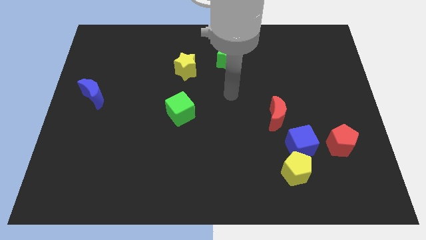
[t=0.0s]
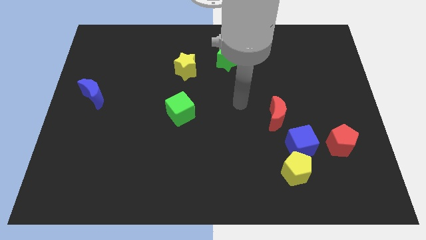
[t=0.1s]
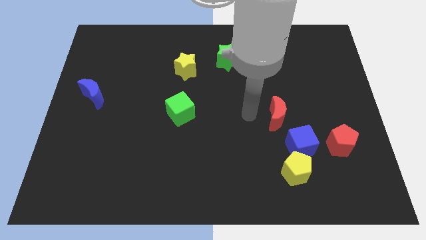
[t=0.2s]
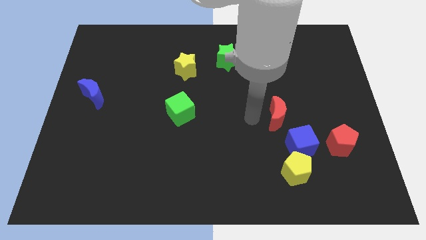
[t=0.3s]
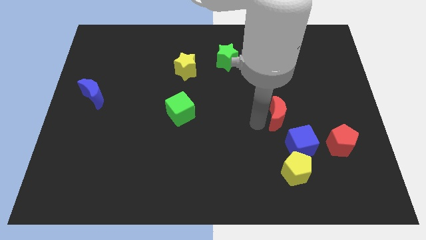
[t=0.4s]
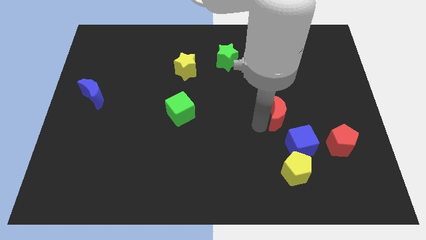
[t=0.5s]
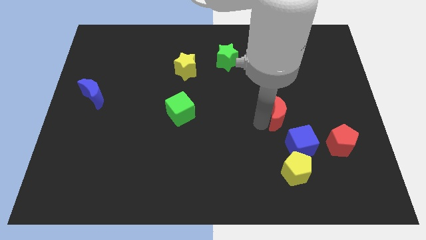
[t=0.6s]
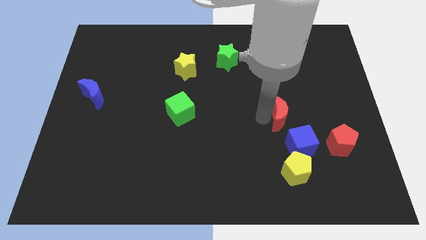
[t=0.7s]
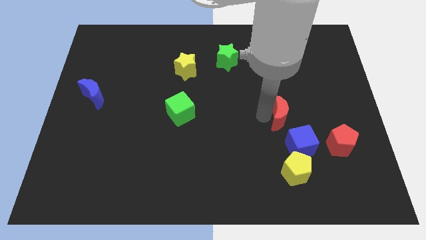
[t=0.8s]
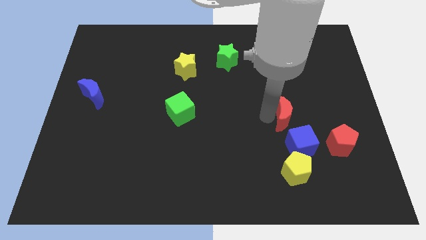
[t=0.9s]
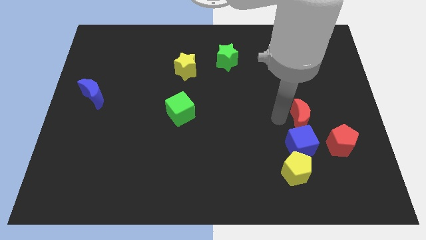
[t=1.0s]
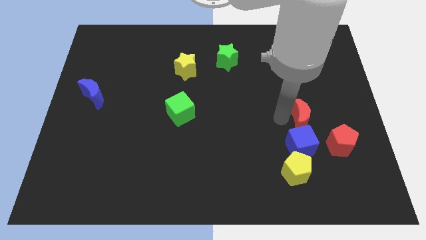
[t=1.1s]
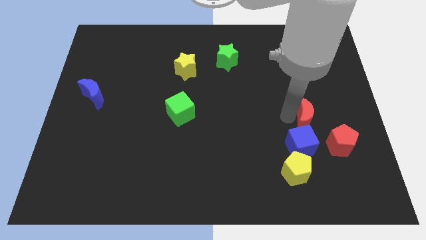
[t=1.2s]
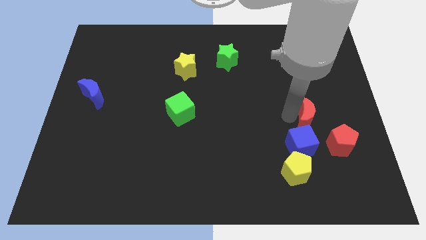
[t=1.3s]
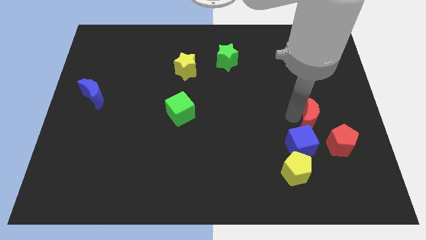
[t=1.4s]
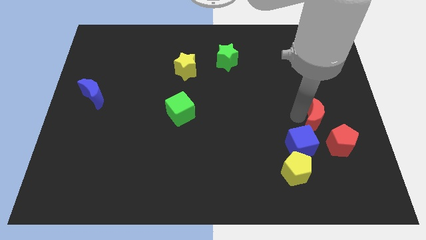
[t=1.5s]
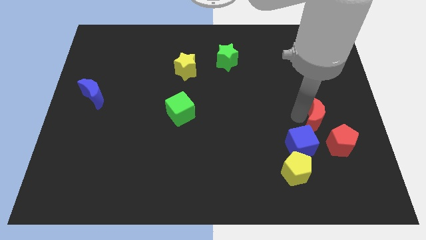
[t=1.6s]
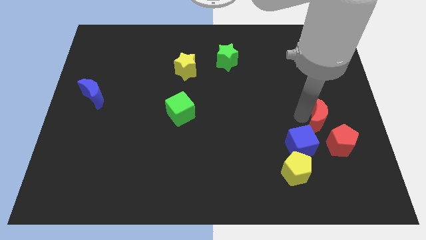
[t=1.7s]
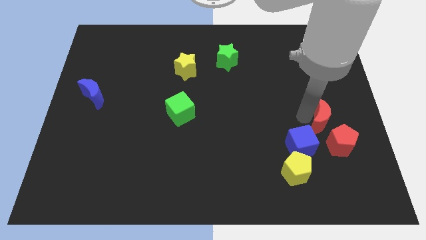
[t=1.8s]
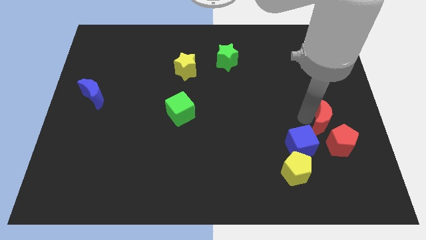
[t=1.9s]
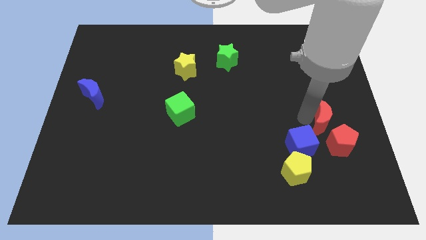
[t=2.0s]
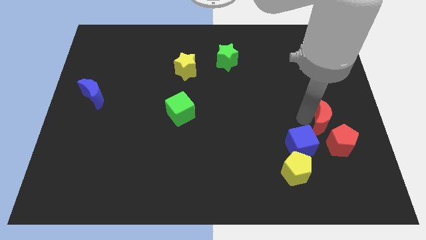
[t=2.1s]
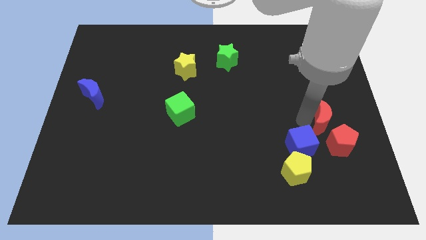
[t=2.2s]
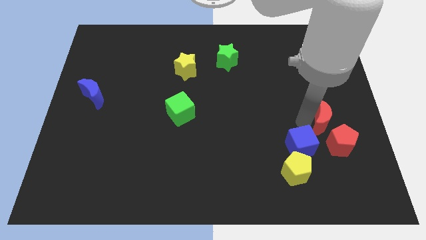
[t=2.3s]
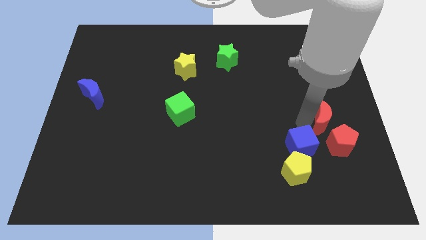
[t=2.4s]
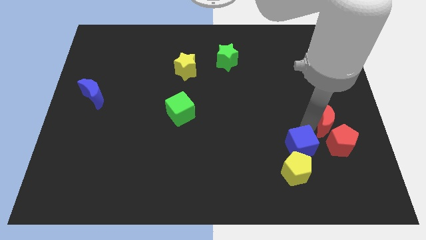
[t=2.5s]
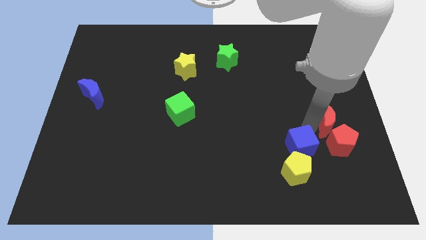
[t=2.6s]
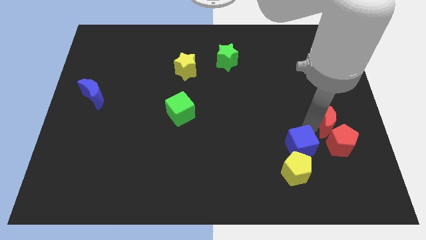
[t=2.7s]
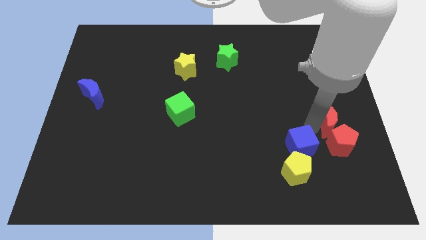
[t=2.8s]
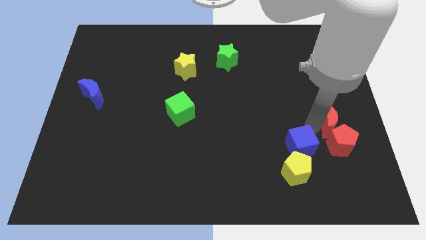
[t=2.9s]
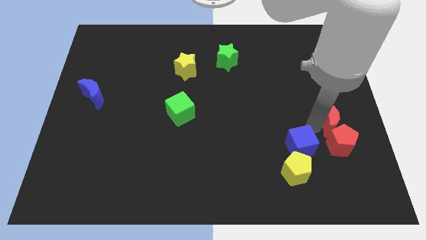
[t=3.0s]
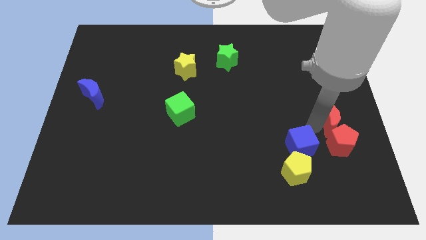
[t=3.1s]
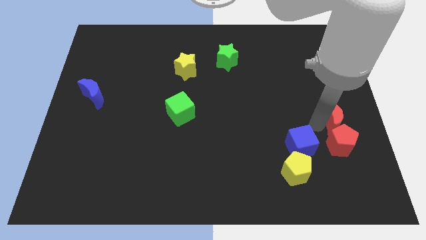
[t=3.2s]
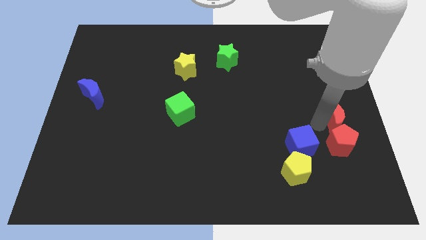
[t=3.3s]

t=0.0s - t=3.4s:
place the red crescent above the red penatgon

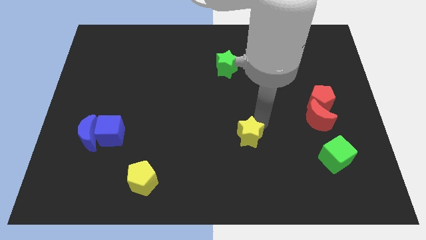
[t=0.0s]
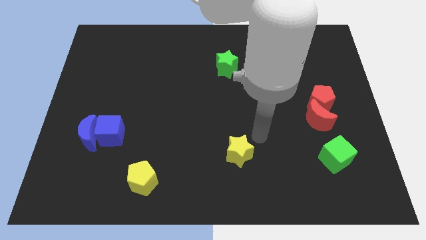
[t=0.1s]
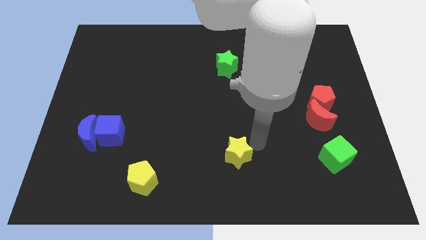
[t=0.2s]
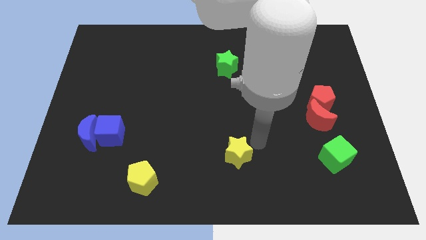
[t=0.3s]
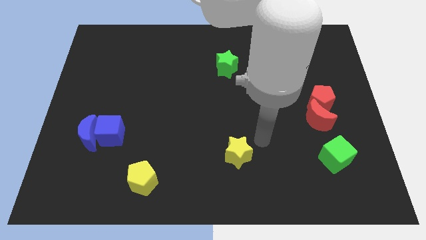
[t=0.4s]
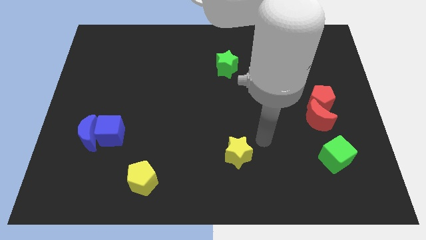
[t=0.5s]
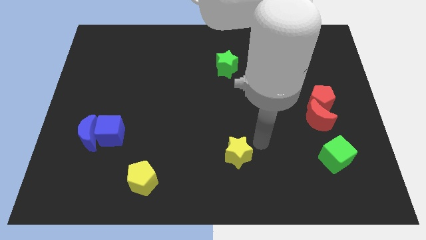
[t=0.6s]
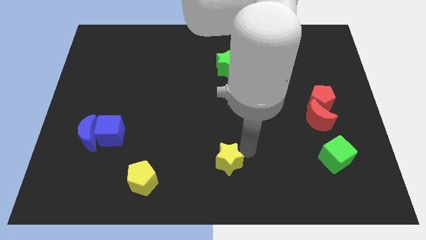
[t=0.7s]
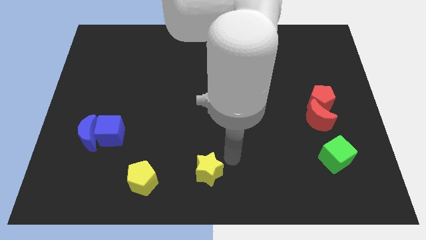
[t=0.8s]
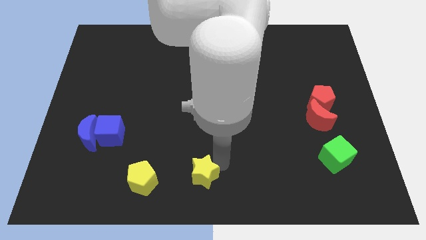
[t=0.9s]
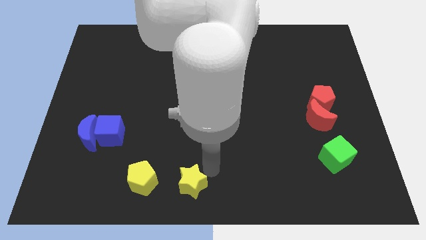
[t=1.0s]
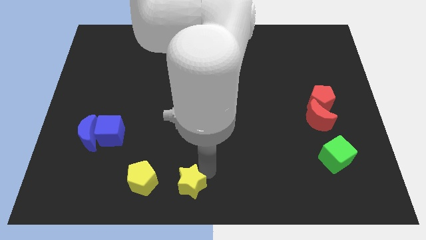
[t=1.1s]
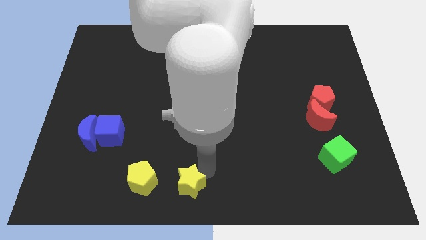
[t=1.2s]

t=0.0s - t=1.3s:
place the yellow star to the right of the yellow pentagon

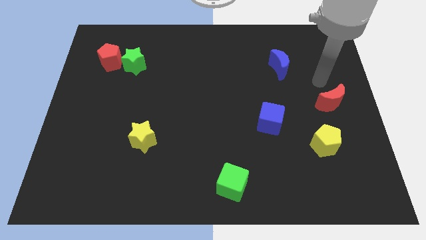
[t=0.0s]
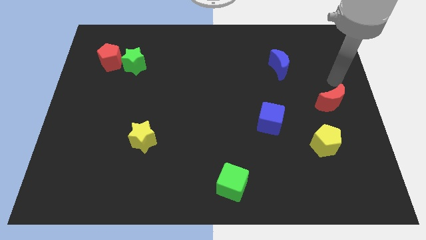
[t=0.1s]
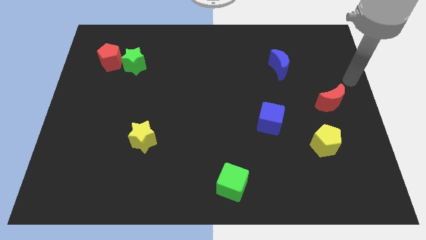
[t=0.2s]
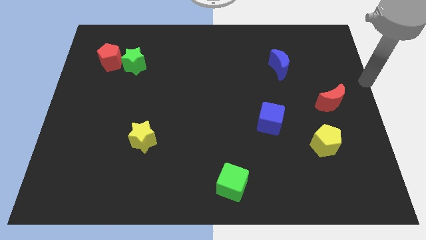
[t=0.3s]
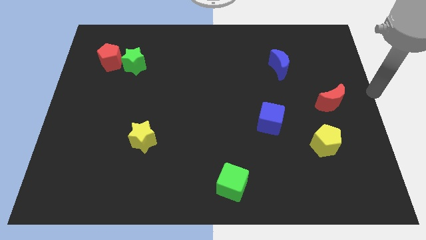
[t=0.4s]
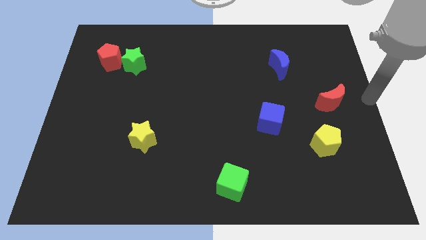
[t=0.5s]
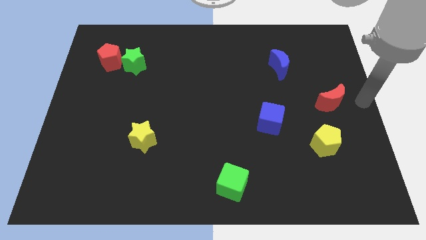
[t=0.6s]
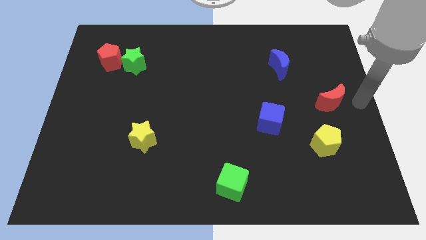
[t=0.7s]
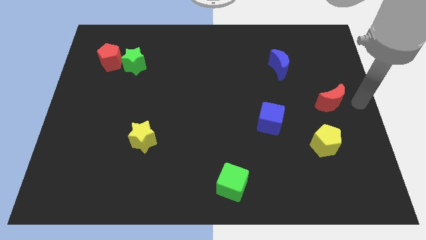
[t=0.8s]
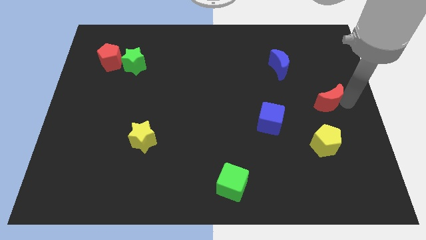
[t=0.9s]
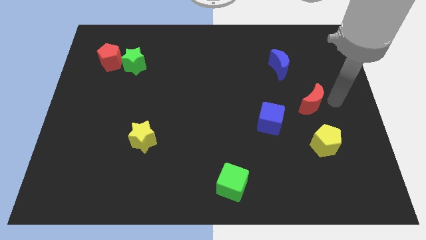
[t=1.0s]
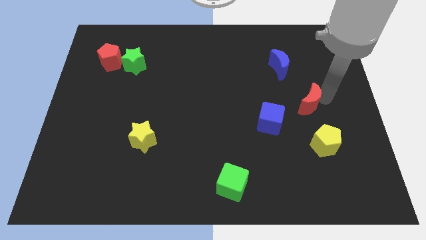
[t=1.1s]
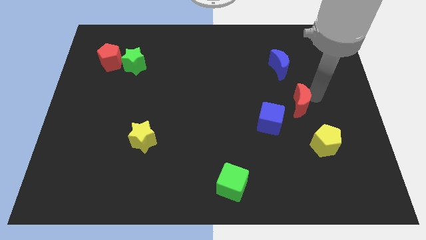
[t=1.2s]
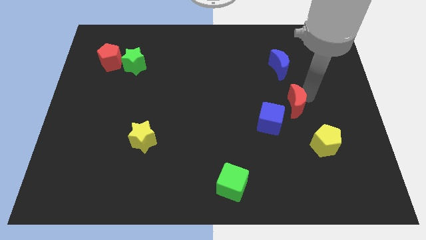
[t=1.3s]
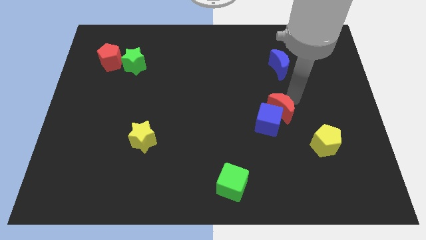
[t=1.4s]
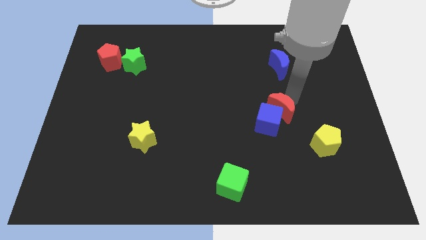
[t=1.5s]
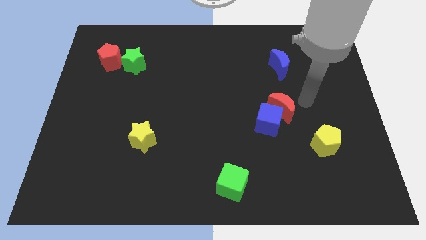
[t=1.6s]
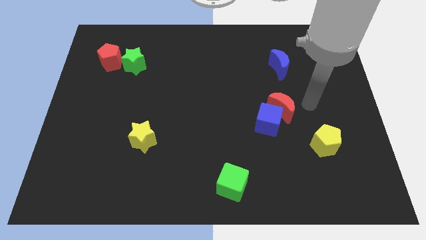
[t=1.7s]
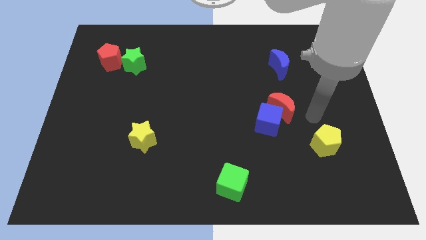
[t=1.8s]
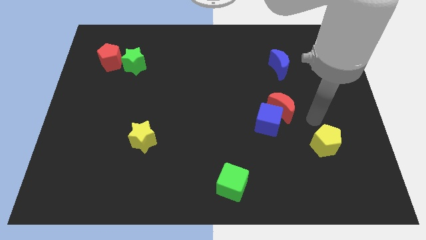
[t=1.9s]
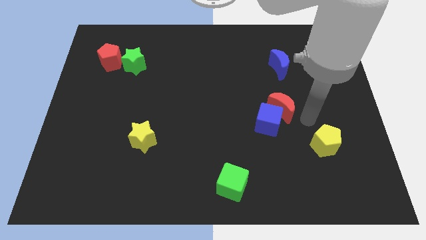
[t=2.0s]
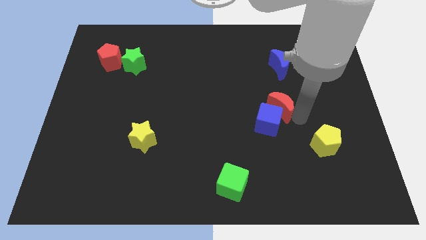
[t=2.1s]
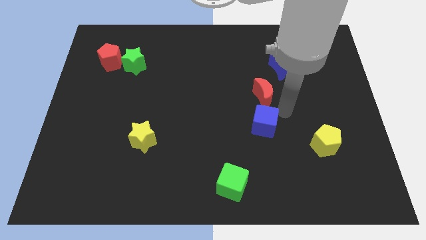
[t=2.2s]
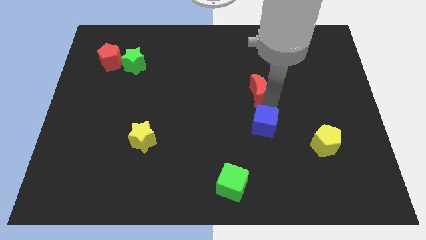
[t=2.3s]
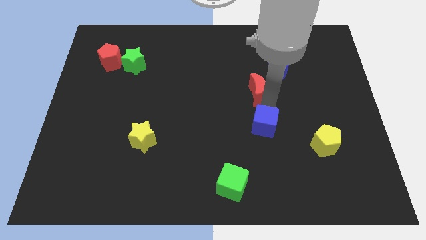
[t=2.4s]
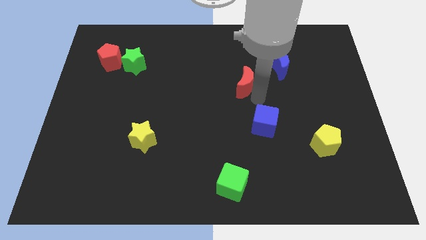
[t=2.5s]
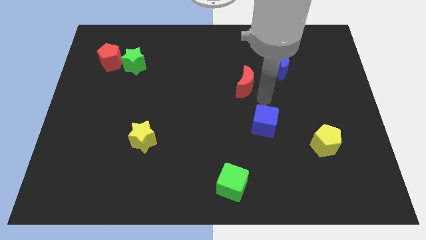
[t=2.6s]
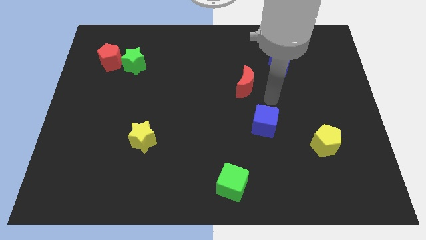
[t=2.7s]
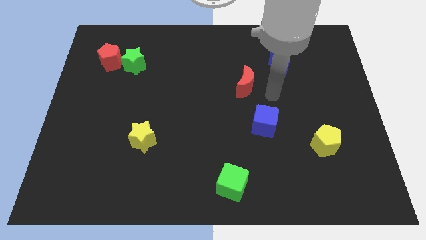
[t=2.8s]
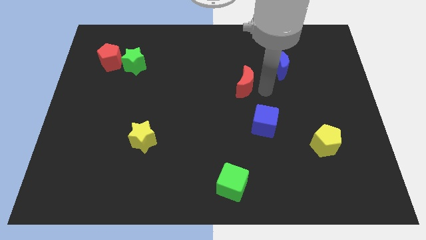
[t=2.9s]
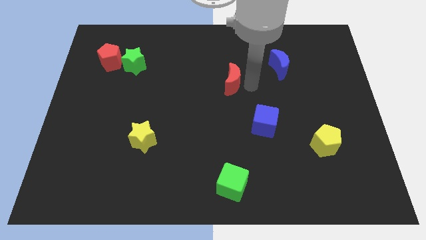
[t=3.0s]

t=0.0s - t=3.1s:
move red moon middle of the board

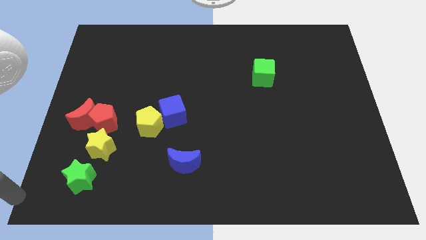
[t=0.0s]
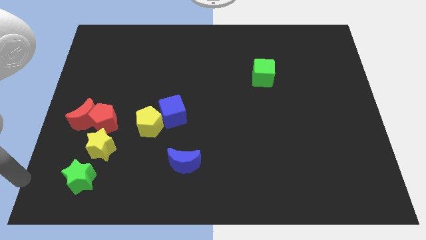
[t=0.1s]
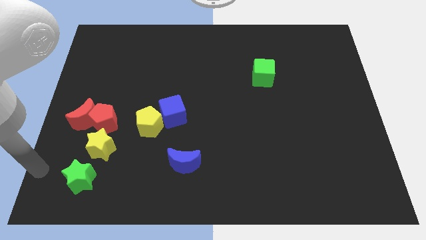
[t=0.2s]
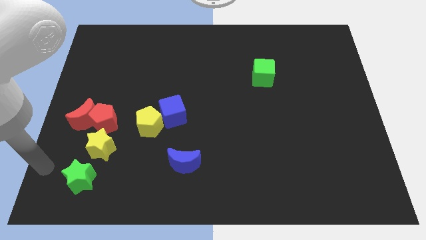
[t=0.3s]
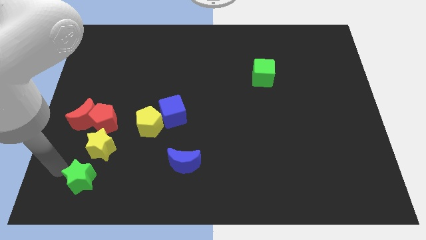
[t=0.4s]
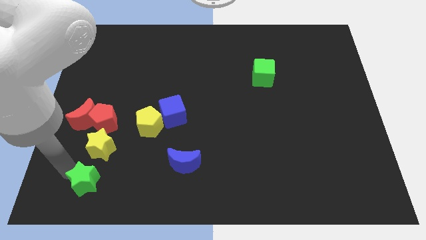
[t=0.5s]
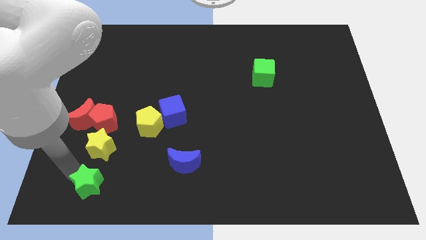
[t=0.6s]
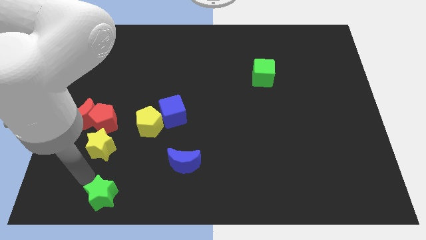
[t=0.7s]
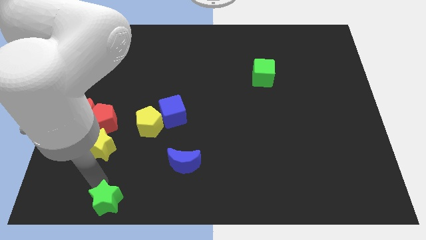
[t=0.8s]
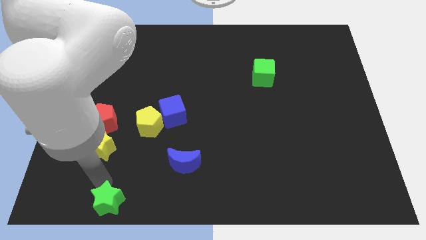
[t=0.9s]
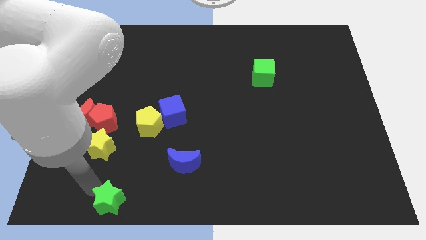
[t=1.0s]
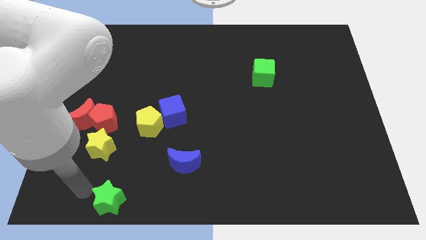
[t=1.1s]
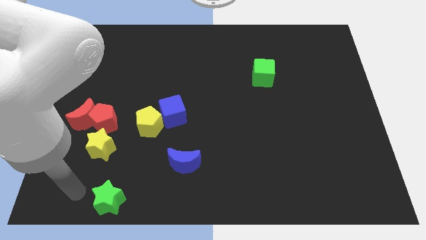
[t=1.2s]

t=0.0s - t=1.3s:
move the green star slightly to the right
